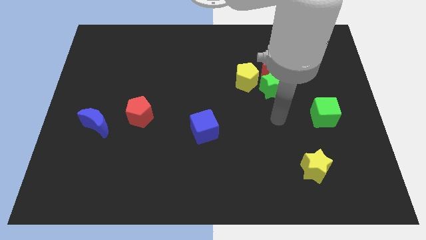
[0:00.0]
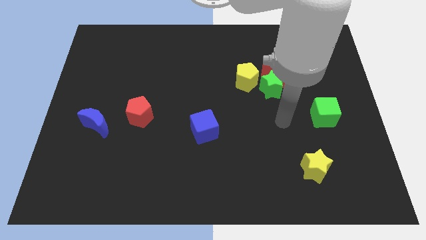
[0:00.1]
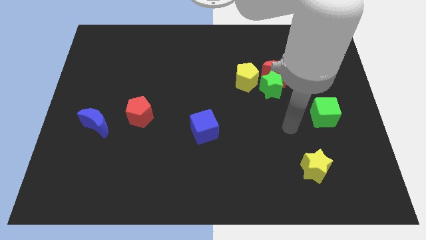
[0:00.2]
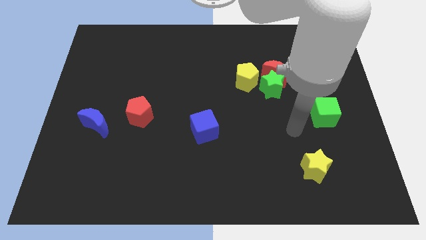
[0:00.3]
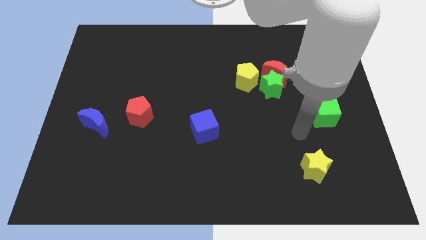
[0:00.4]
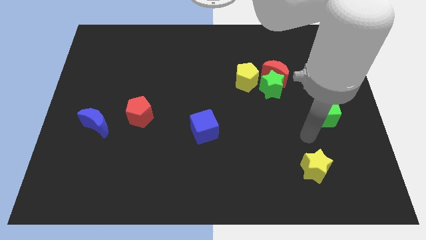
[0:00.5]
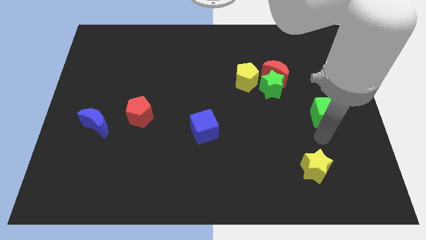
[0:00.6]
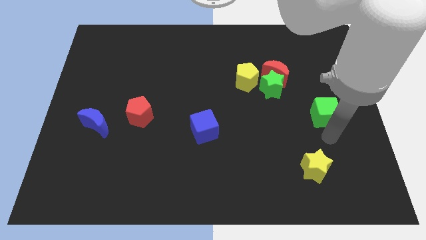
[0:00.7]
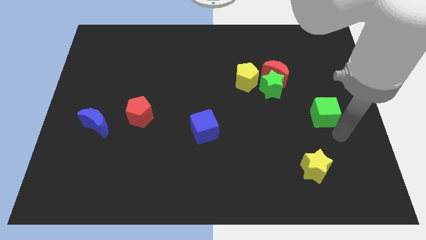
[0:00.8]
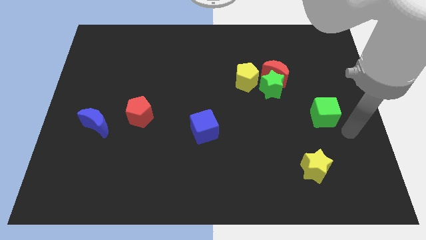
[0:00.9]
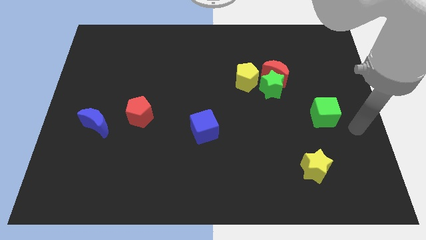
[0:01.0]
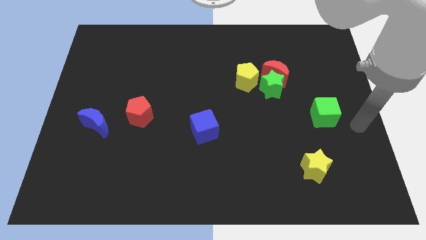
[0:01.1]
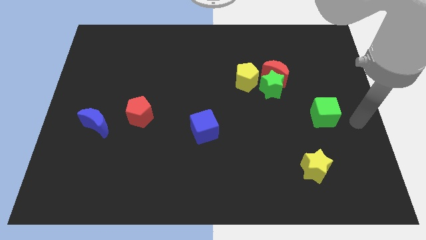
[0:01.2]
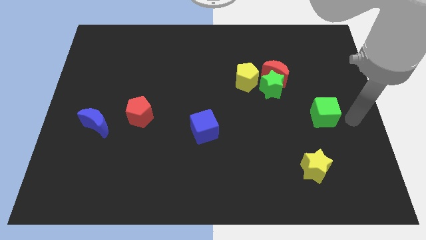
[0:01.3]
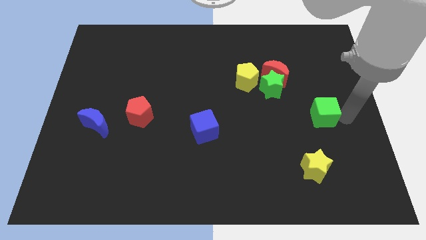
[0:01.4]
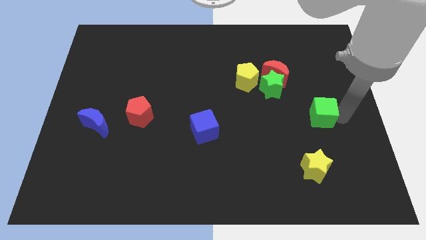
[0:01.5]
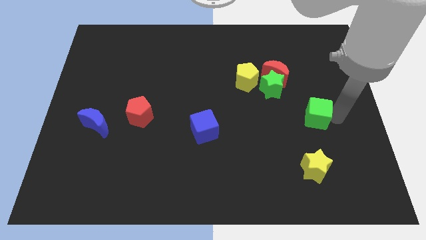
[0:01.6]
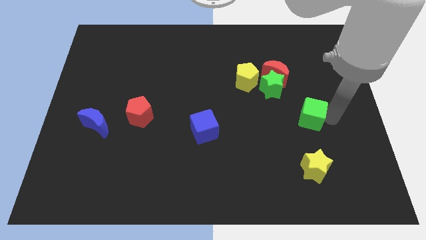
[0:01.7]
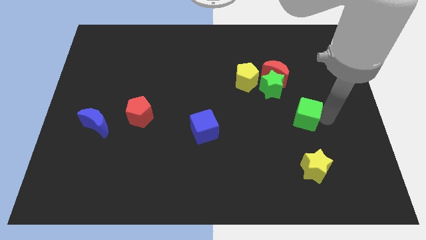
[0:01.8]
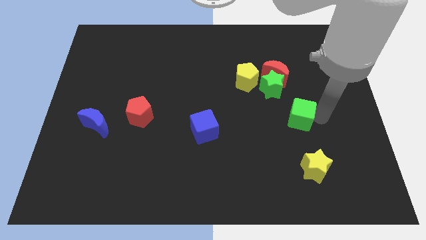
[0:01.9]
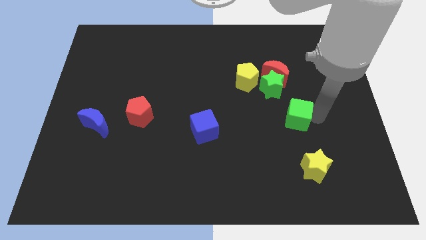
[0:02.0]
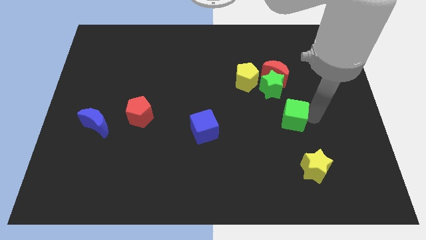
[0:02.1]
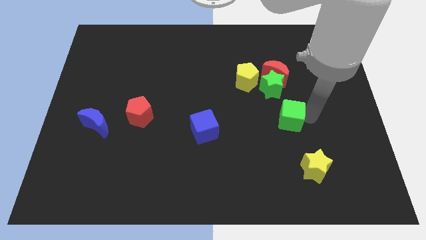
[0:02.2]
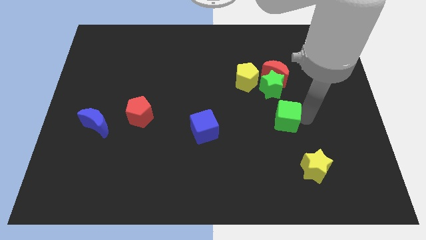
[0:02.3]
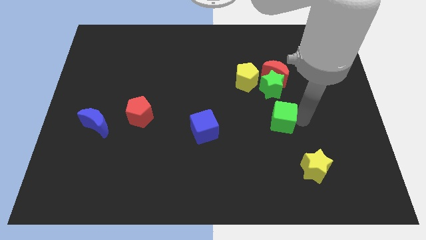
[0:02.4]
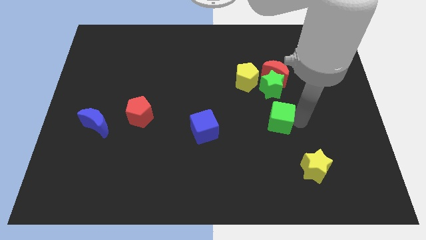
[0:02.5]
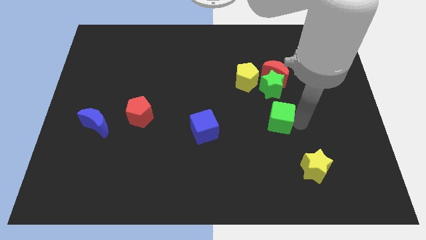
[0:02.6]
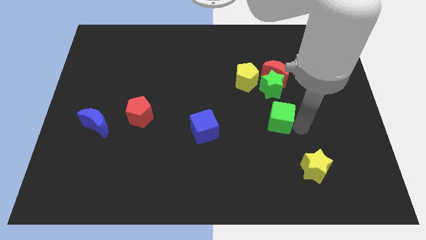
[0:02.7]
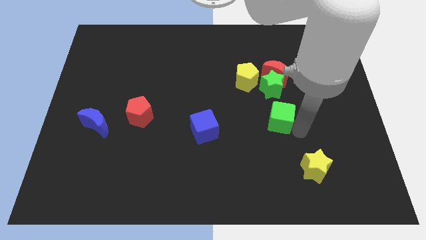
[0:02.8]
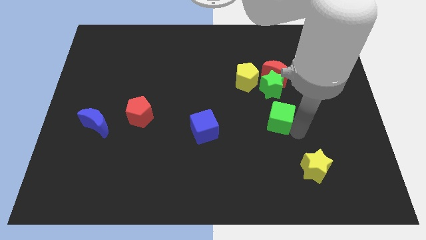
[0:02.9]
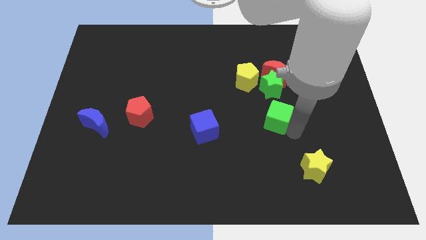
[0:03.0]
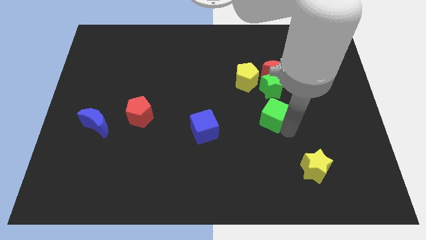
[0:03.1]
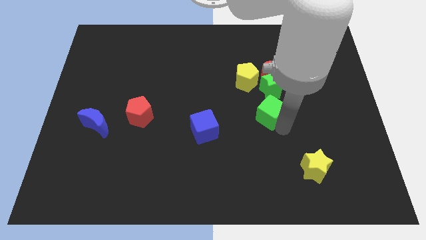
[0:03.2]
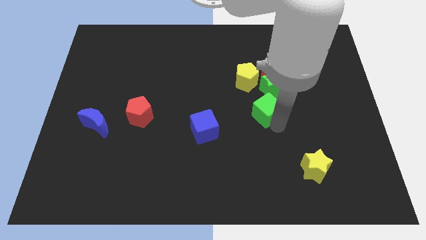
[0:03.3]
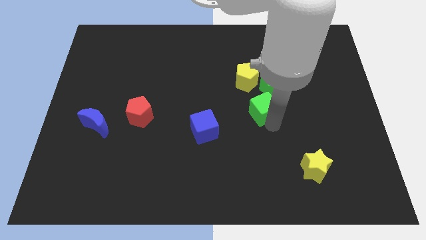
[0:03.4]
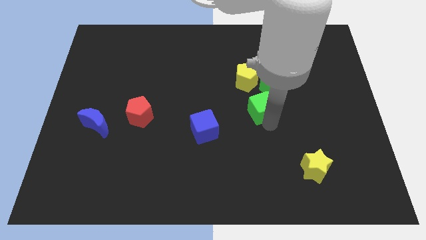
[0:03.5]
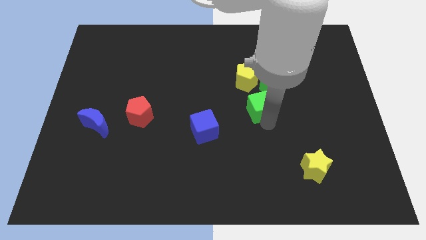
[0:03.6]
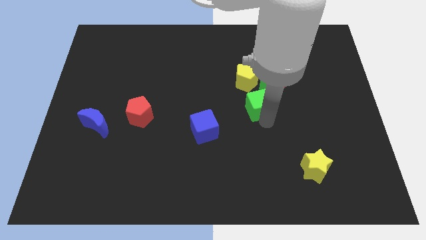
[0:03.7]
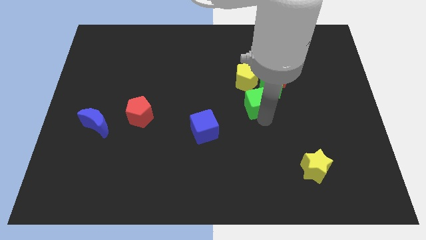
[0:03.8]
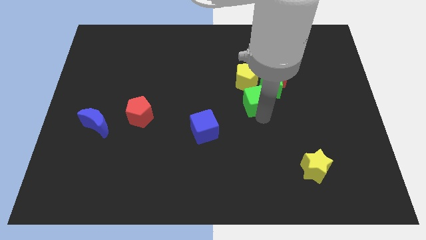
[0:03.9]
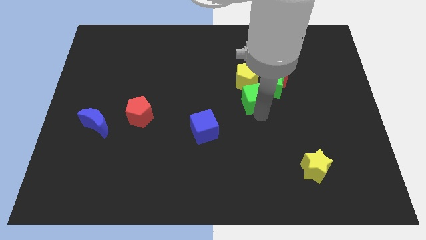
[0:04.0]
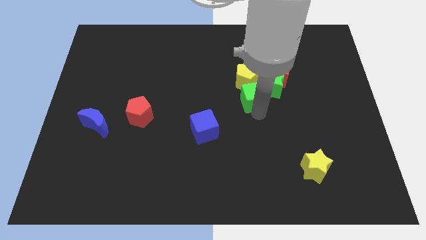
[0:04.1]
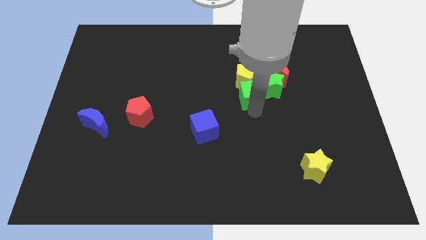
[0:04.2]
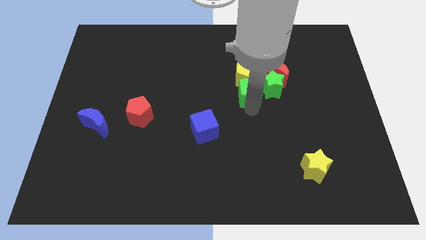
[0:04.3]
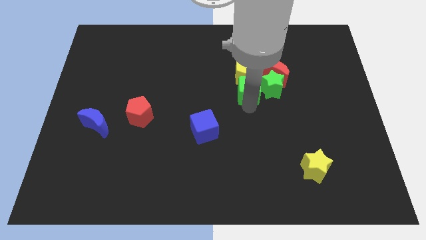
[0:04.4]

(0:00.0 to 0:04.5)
move the green cube towards the yellow pentagon

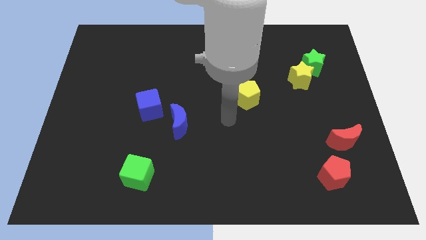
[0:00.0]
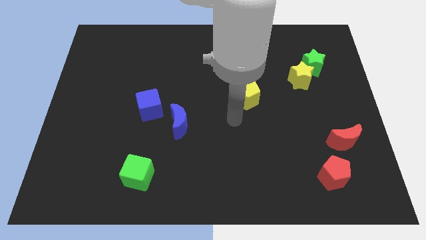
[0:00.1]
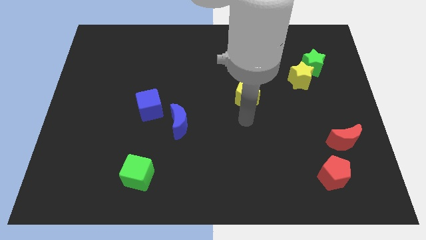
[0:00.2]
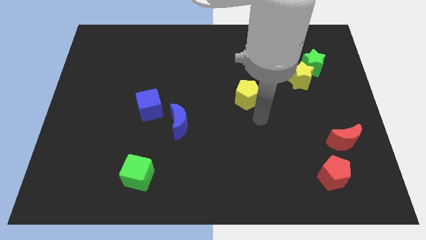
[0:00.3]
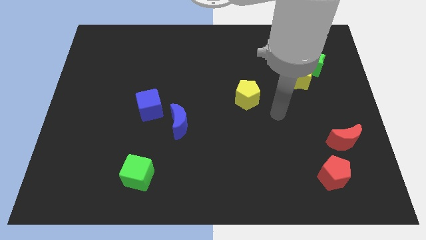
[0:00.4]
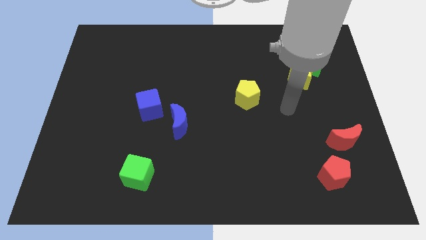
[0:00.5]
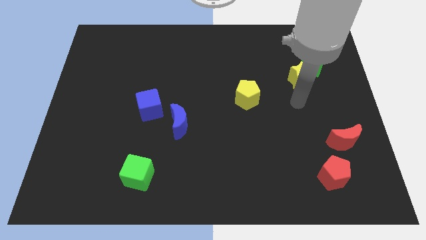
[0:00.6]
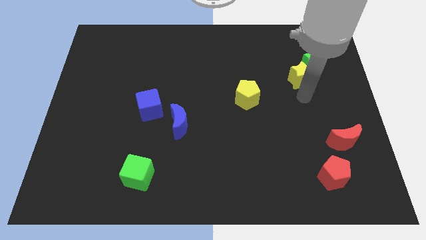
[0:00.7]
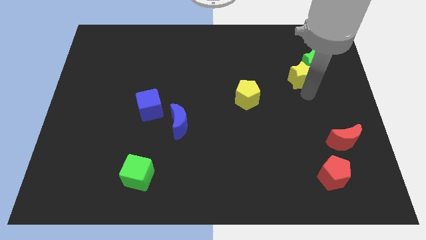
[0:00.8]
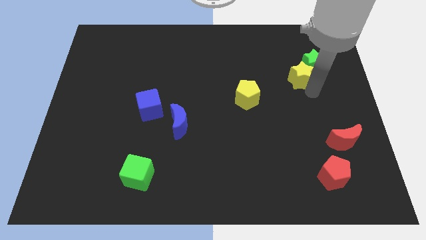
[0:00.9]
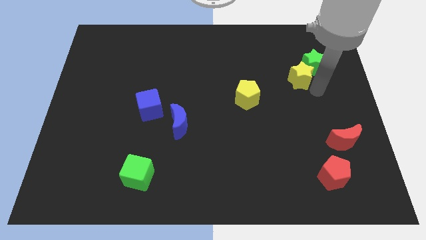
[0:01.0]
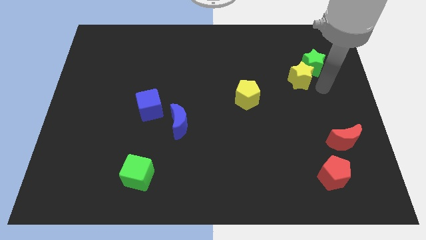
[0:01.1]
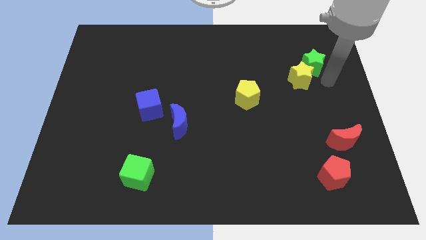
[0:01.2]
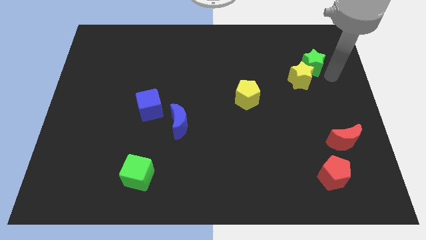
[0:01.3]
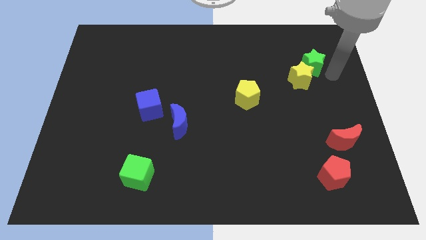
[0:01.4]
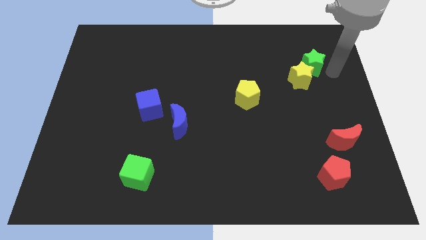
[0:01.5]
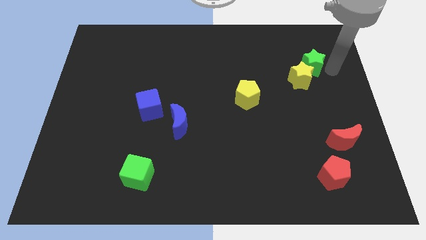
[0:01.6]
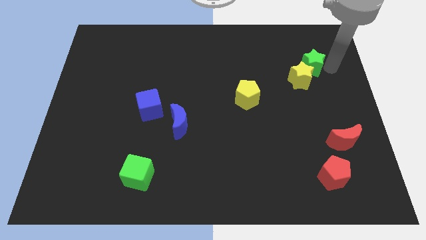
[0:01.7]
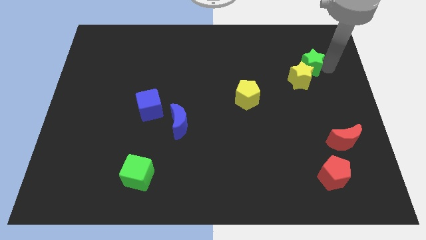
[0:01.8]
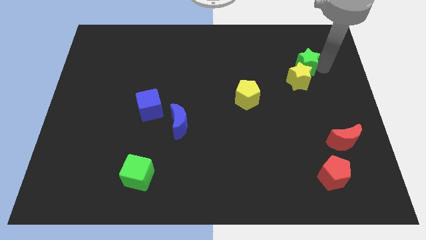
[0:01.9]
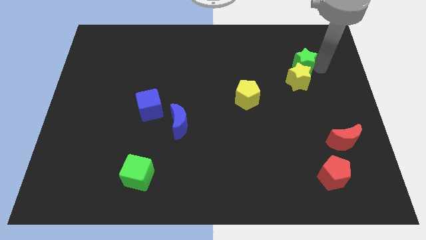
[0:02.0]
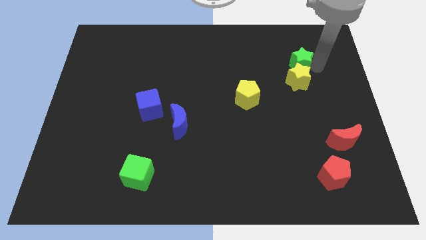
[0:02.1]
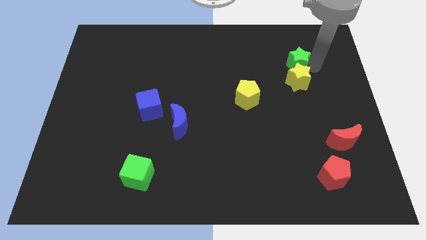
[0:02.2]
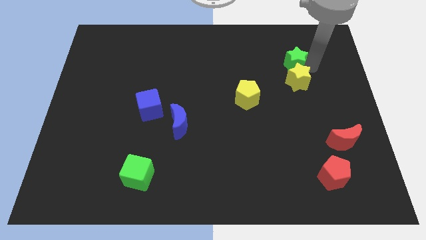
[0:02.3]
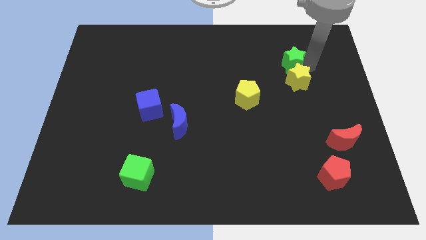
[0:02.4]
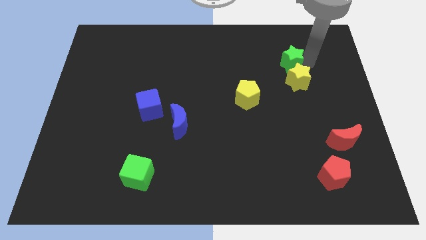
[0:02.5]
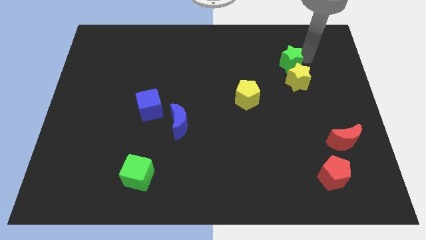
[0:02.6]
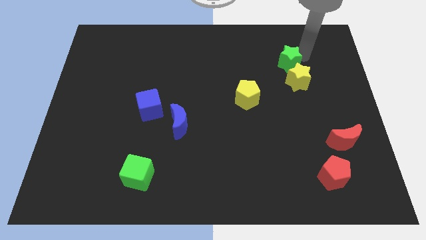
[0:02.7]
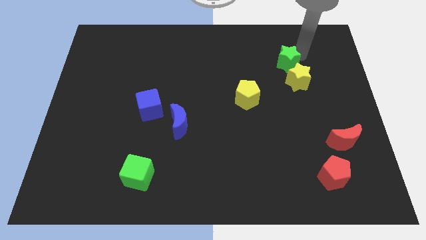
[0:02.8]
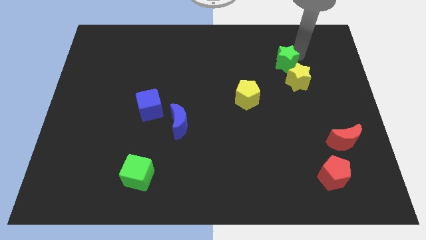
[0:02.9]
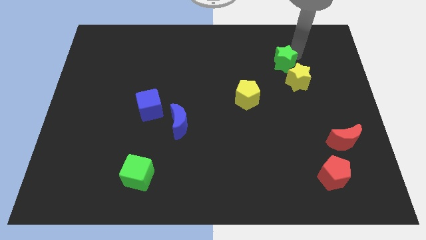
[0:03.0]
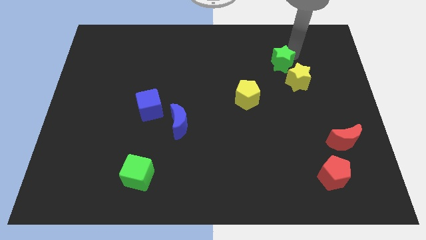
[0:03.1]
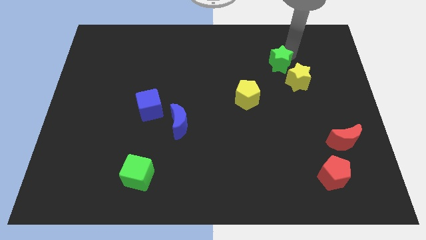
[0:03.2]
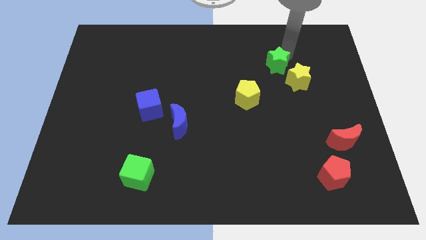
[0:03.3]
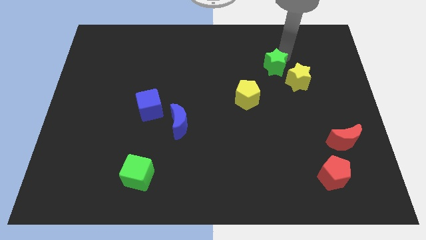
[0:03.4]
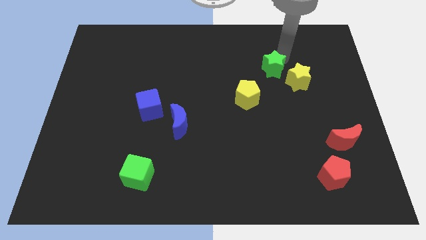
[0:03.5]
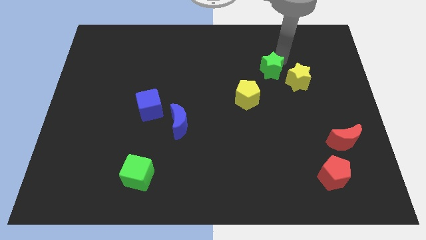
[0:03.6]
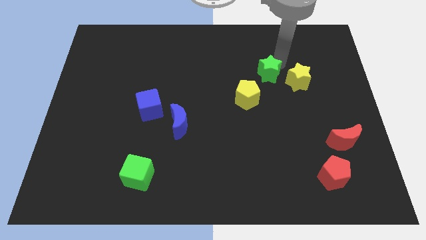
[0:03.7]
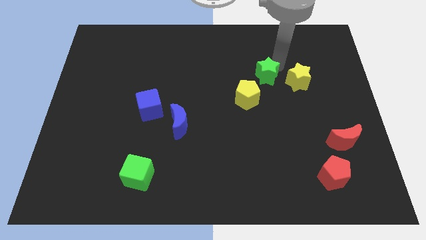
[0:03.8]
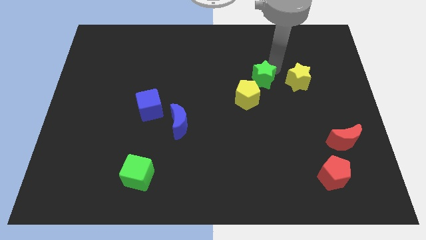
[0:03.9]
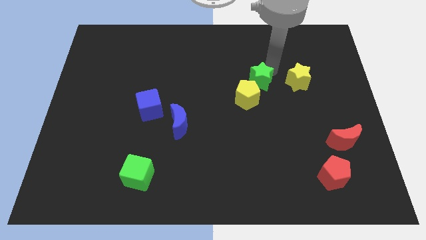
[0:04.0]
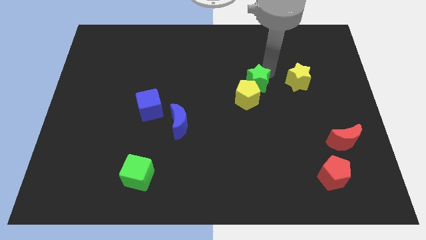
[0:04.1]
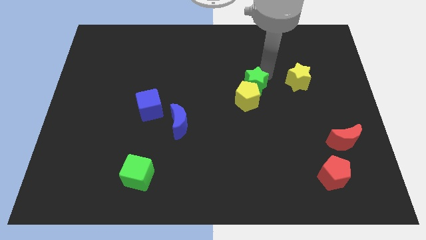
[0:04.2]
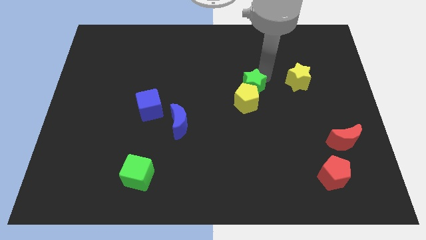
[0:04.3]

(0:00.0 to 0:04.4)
slide the green star next to the yellow pentagon
